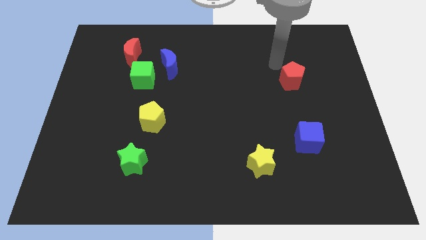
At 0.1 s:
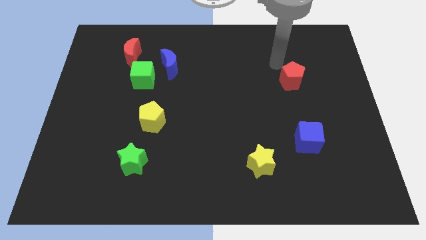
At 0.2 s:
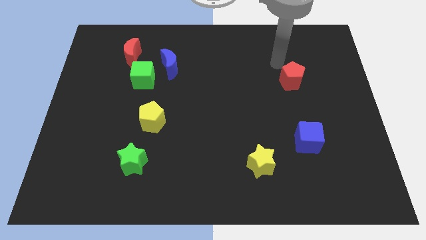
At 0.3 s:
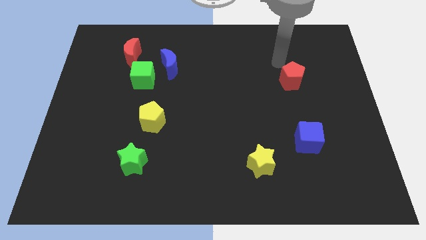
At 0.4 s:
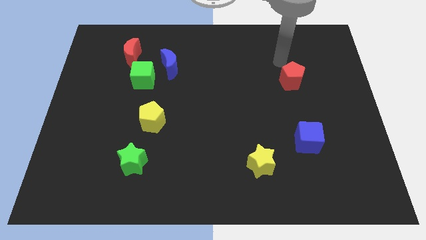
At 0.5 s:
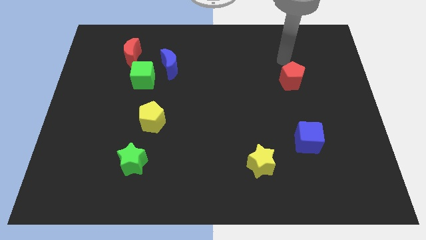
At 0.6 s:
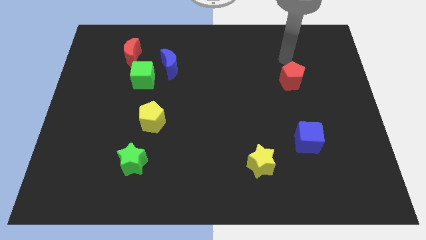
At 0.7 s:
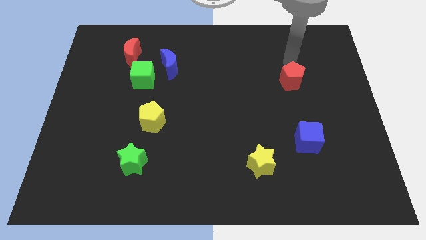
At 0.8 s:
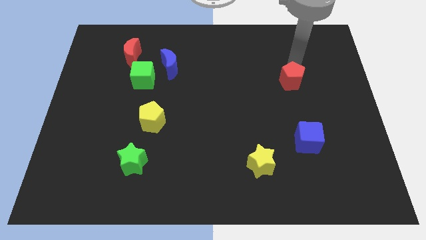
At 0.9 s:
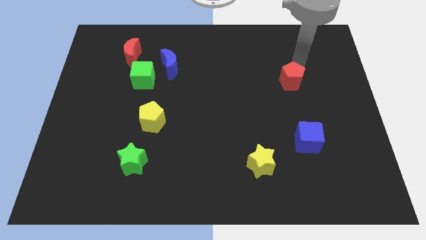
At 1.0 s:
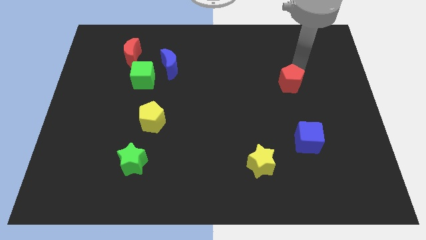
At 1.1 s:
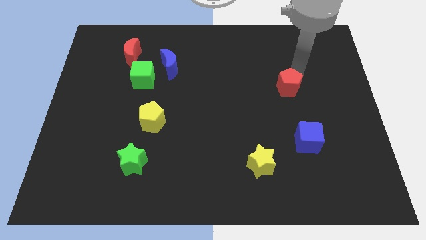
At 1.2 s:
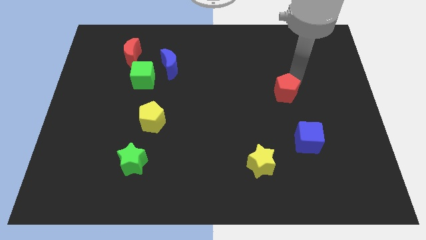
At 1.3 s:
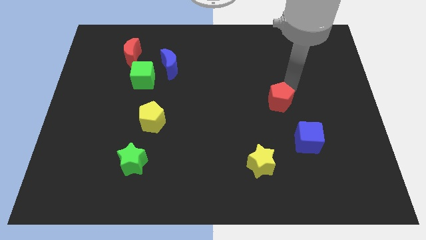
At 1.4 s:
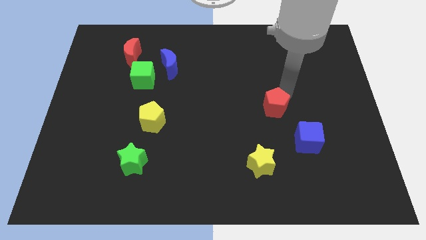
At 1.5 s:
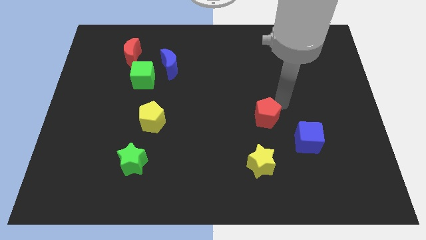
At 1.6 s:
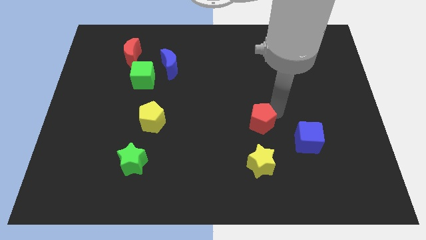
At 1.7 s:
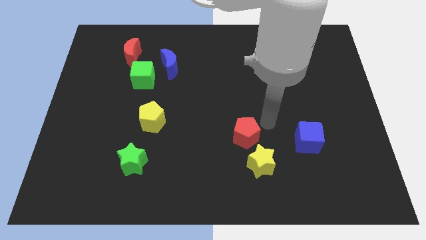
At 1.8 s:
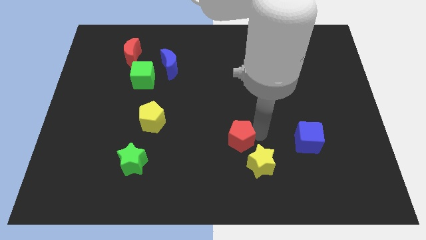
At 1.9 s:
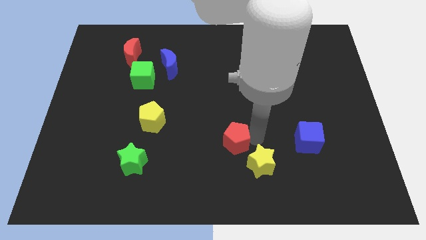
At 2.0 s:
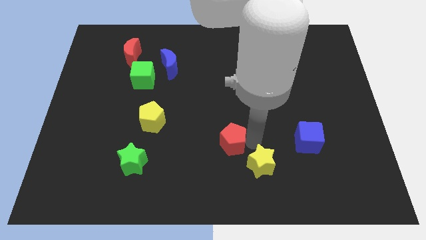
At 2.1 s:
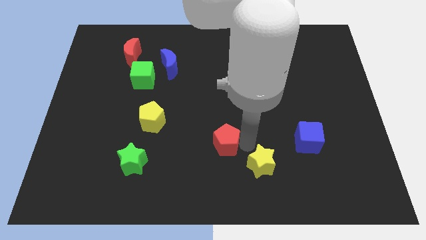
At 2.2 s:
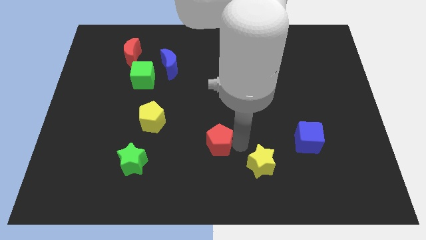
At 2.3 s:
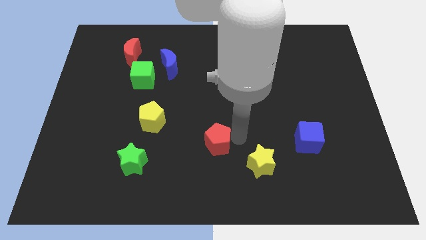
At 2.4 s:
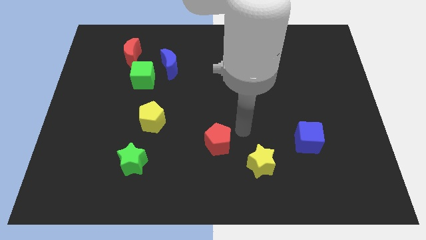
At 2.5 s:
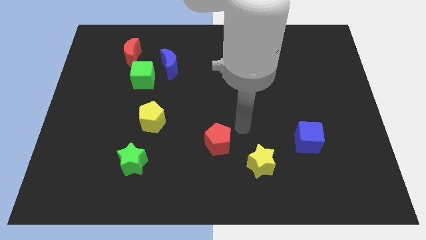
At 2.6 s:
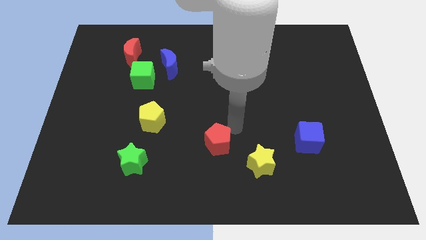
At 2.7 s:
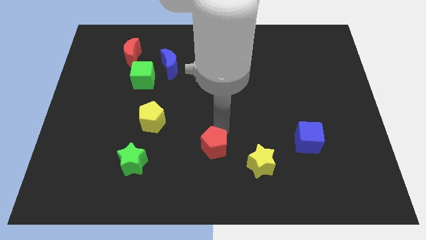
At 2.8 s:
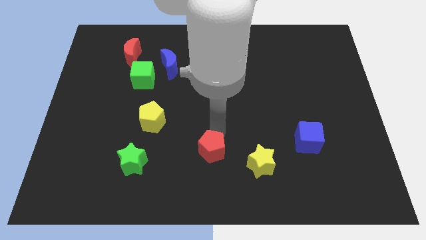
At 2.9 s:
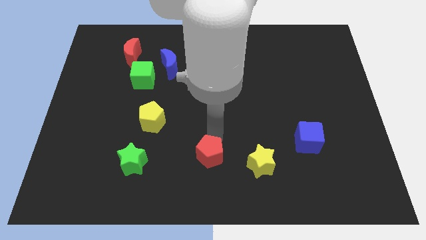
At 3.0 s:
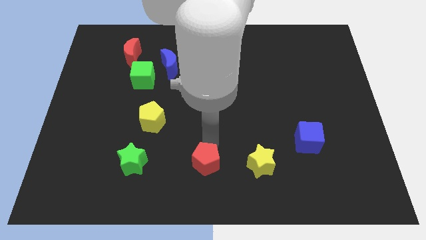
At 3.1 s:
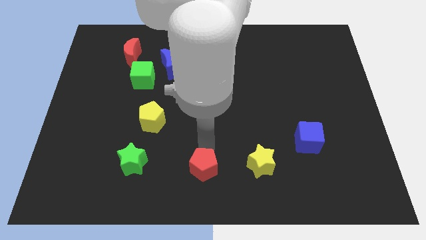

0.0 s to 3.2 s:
place the red pentagon to the right of the green star

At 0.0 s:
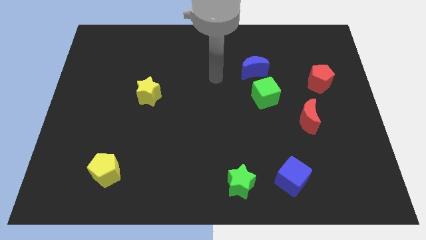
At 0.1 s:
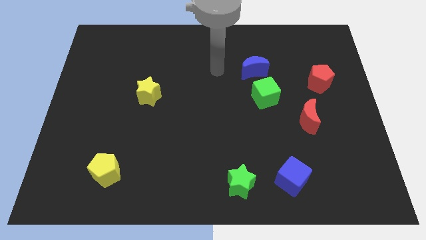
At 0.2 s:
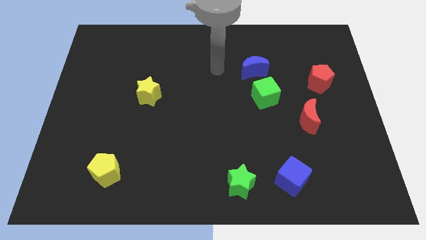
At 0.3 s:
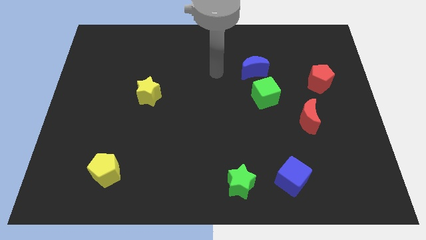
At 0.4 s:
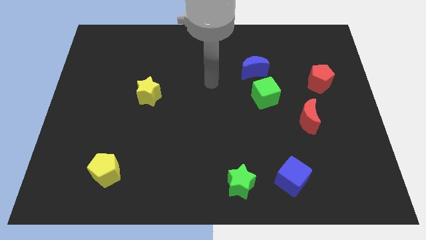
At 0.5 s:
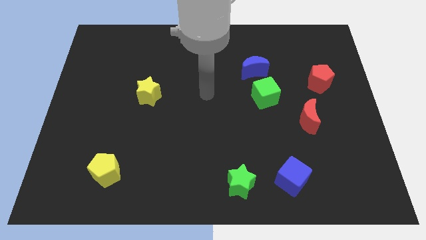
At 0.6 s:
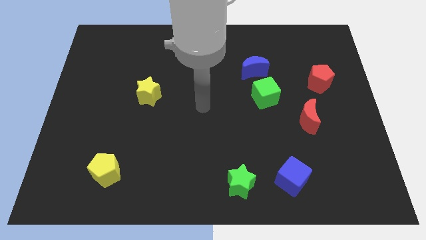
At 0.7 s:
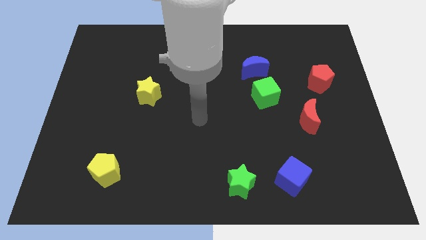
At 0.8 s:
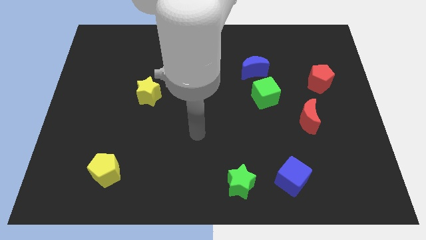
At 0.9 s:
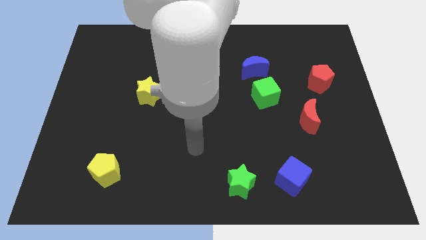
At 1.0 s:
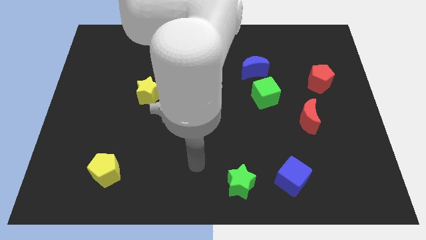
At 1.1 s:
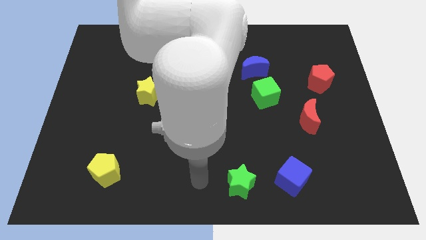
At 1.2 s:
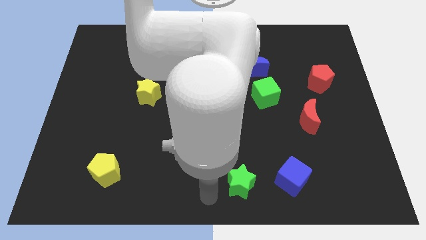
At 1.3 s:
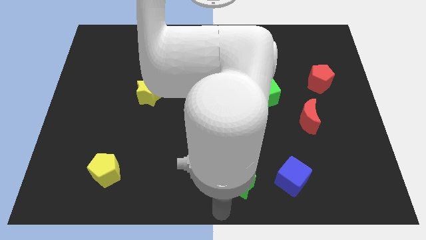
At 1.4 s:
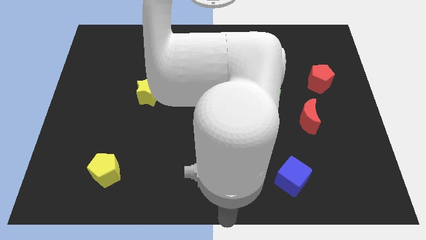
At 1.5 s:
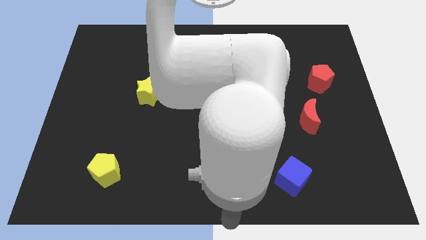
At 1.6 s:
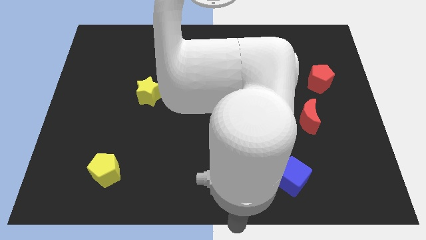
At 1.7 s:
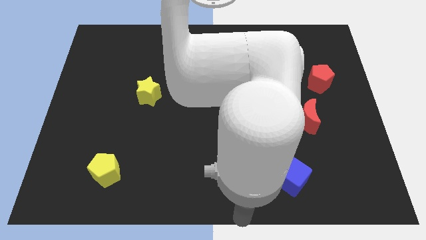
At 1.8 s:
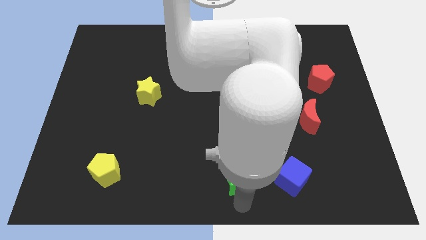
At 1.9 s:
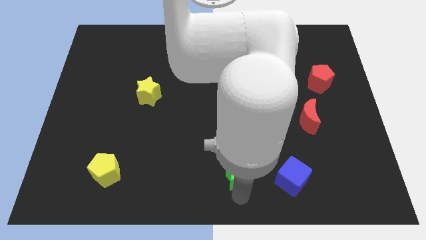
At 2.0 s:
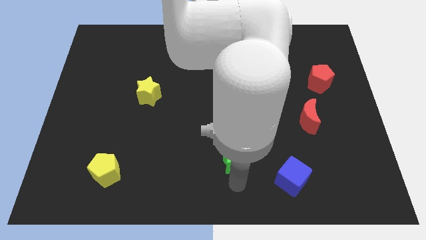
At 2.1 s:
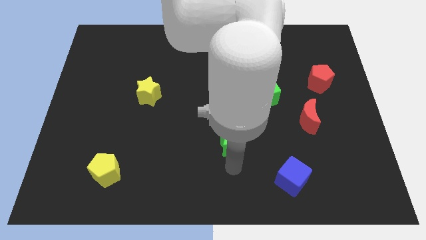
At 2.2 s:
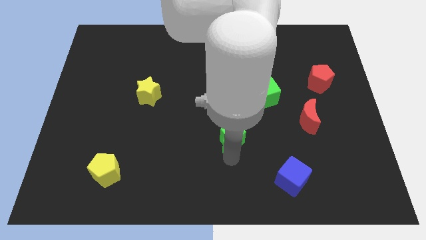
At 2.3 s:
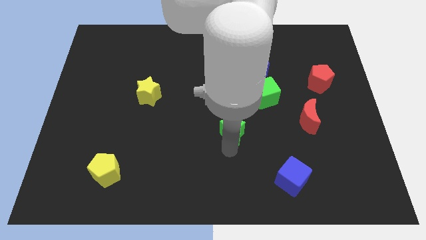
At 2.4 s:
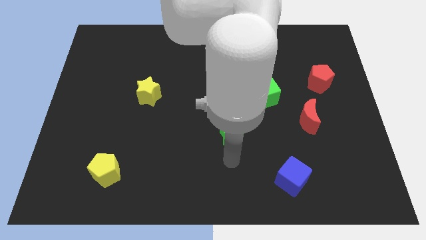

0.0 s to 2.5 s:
push the green star slightly towards the top side

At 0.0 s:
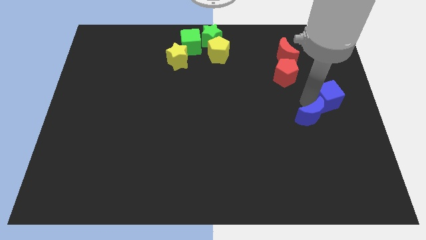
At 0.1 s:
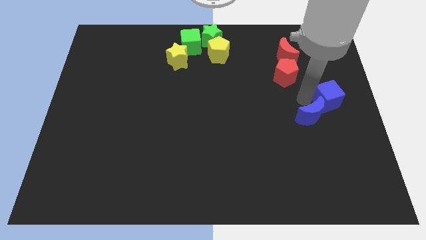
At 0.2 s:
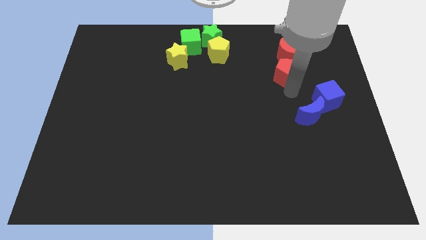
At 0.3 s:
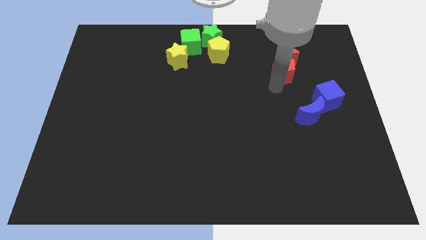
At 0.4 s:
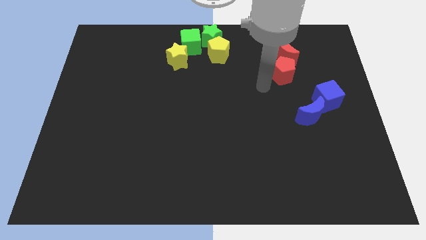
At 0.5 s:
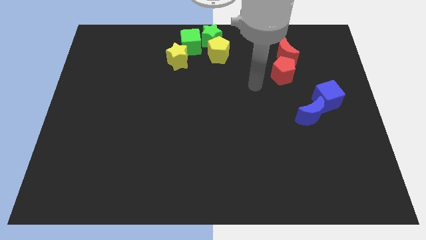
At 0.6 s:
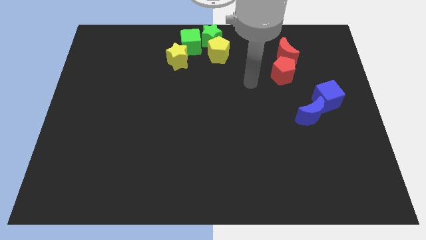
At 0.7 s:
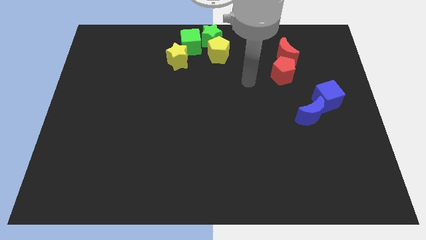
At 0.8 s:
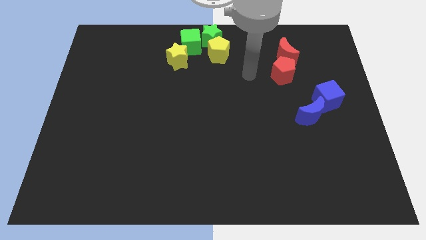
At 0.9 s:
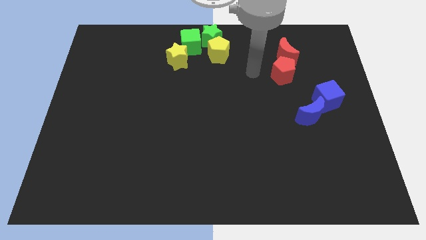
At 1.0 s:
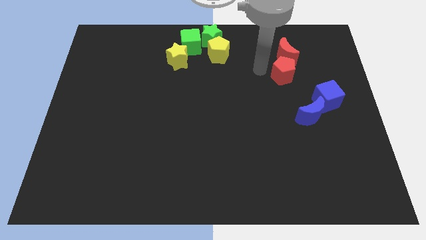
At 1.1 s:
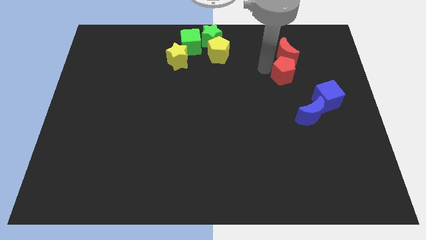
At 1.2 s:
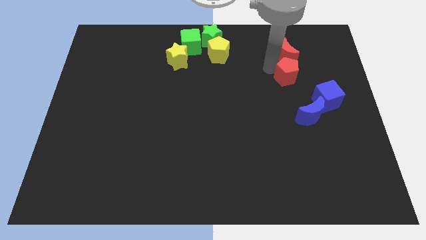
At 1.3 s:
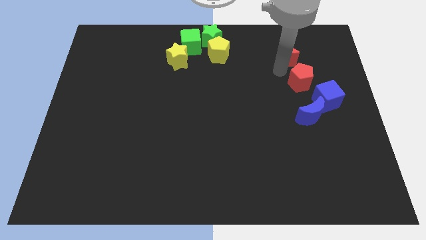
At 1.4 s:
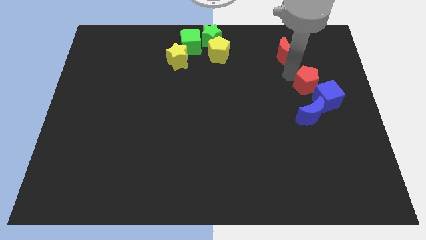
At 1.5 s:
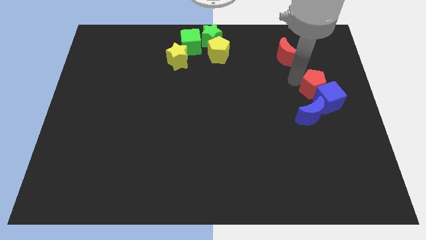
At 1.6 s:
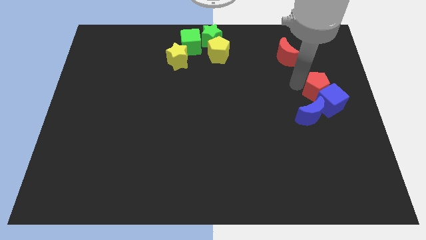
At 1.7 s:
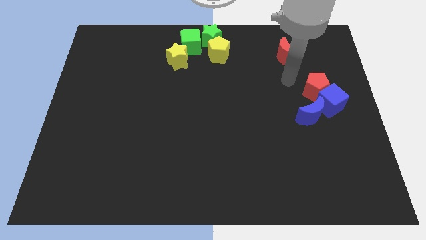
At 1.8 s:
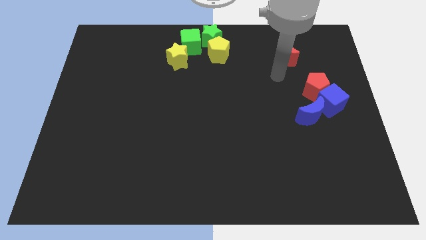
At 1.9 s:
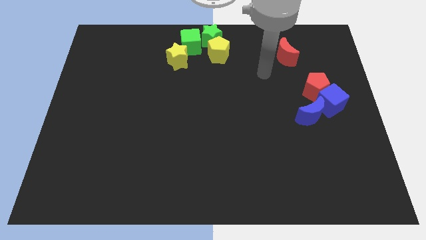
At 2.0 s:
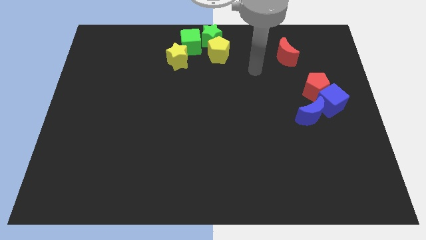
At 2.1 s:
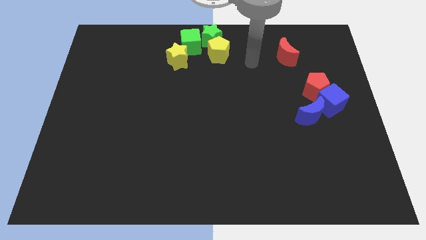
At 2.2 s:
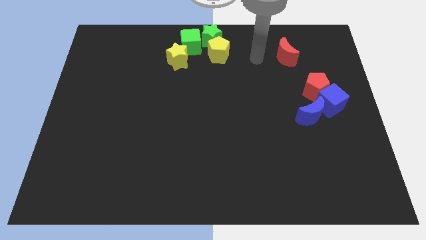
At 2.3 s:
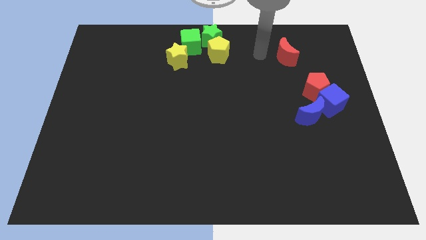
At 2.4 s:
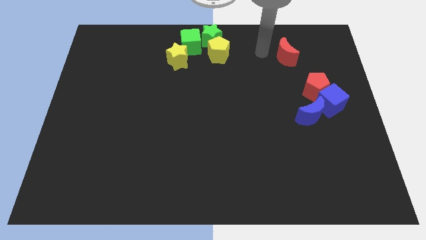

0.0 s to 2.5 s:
push the red pentagon into the blue cube

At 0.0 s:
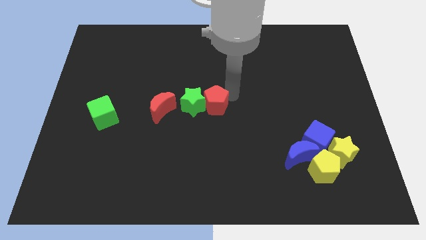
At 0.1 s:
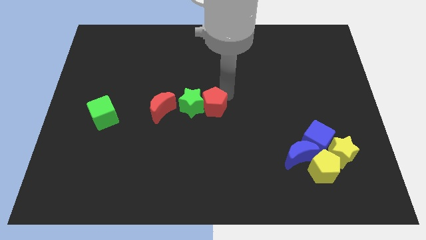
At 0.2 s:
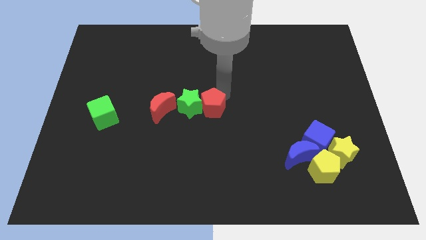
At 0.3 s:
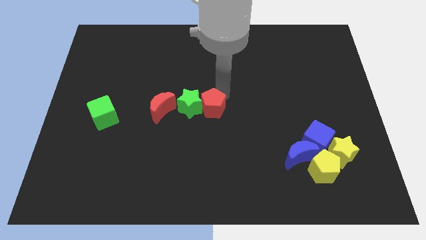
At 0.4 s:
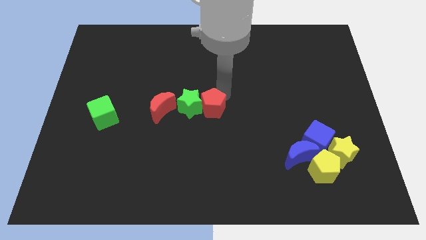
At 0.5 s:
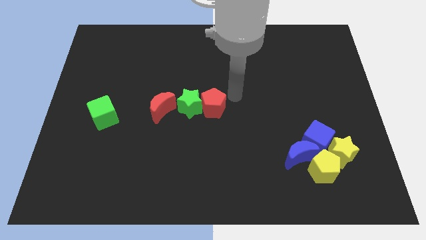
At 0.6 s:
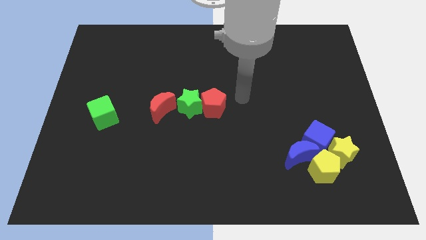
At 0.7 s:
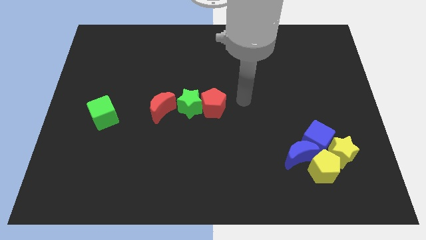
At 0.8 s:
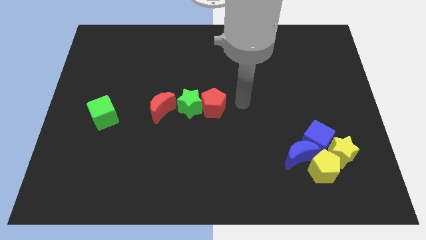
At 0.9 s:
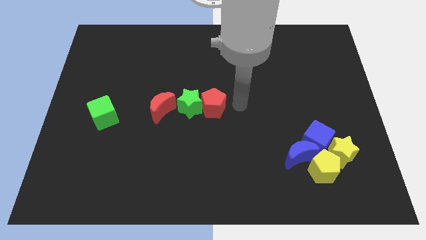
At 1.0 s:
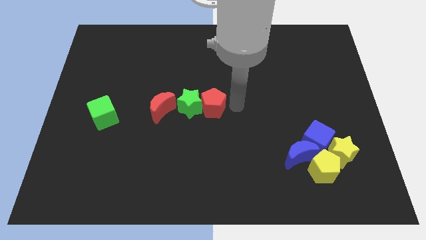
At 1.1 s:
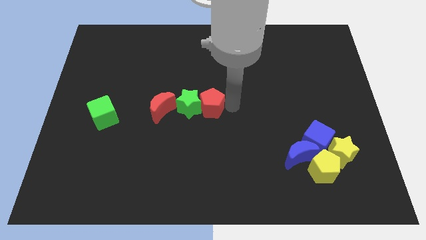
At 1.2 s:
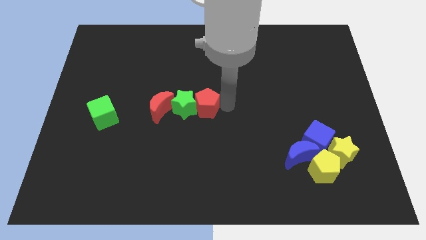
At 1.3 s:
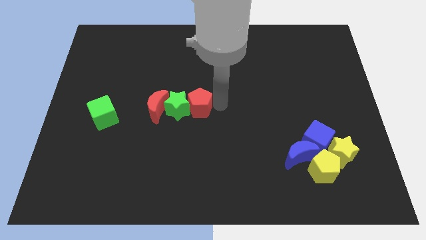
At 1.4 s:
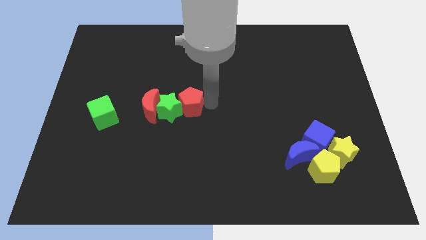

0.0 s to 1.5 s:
push the red pentagon and green star into the right side of the red crescent
